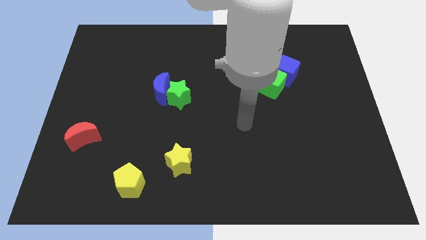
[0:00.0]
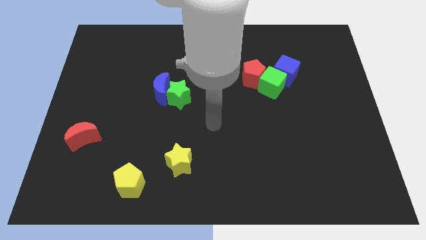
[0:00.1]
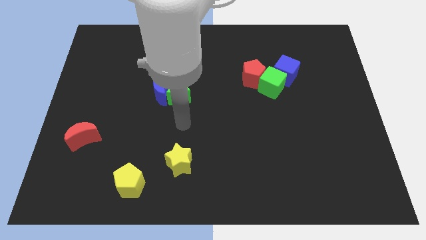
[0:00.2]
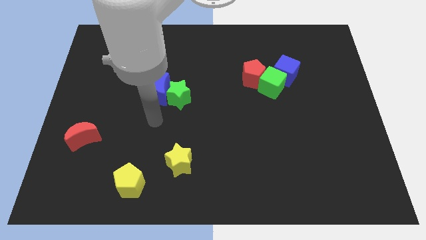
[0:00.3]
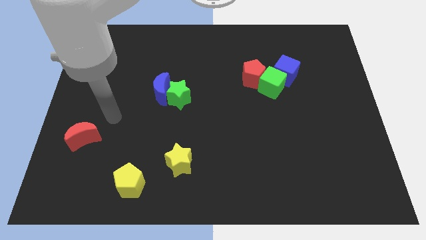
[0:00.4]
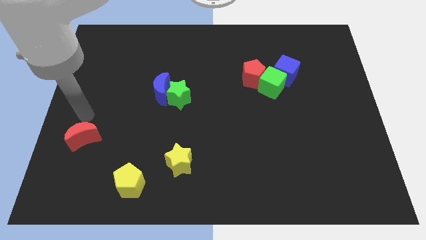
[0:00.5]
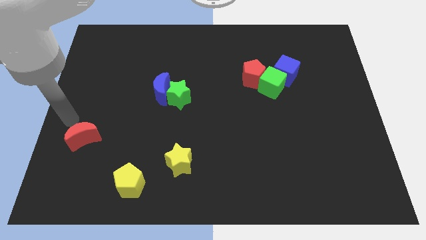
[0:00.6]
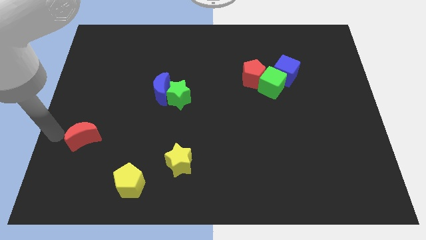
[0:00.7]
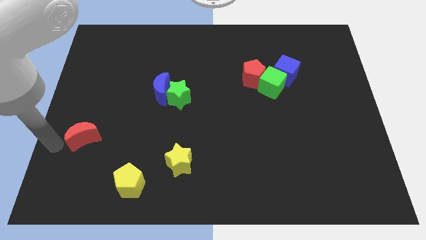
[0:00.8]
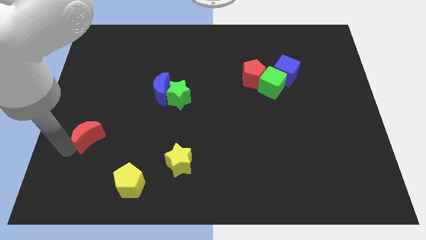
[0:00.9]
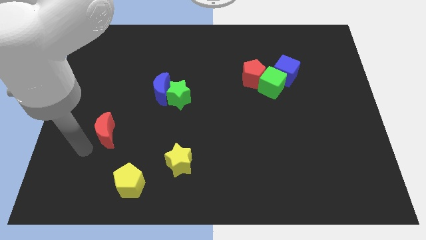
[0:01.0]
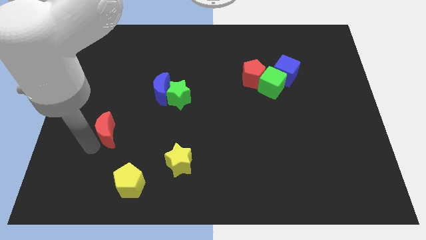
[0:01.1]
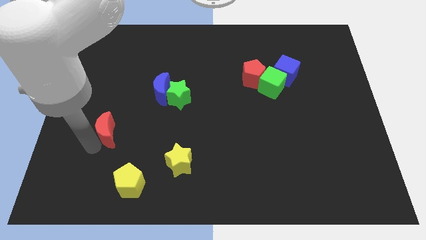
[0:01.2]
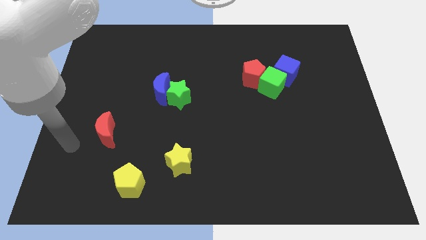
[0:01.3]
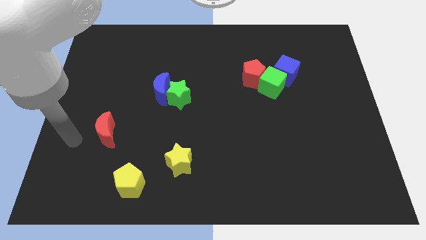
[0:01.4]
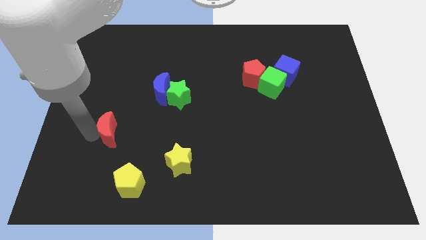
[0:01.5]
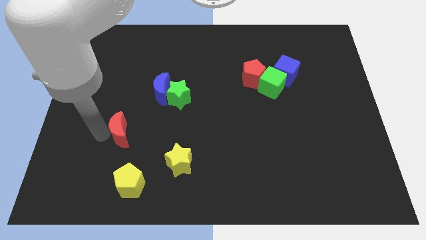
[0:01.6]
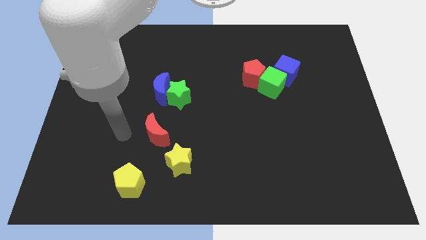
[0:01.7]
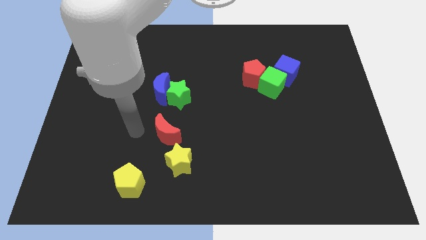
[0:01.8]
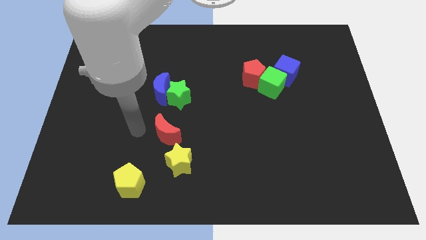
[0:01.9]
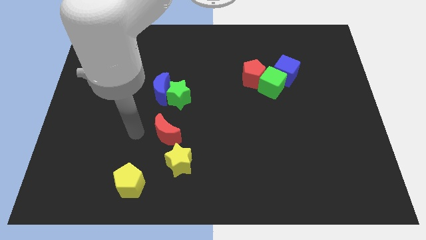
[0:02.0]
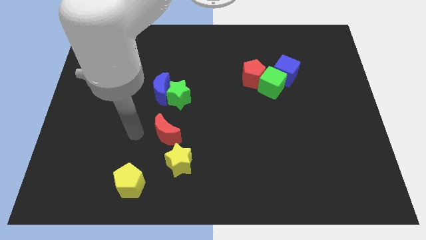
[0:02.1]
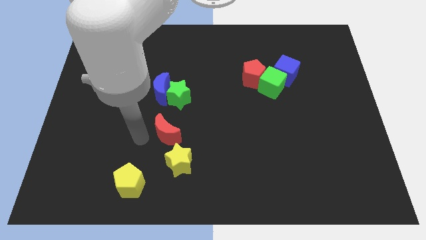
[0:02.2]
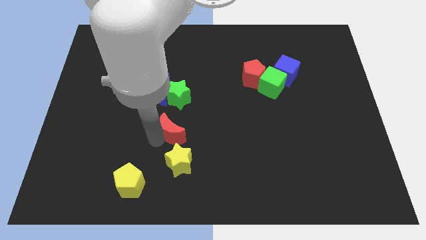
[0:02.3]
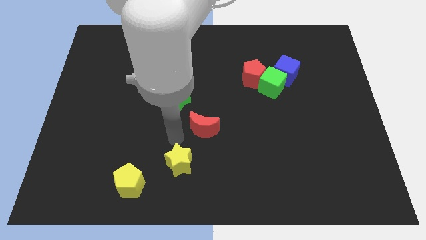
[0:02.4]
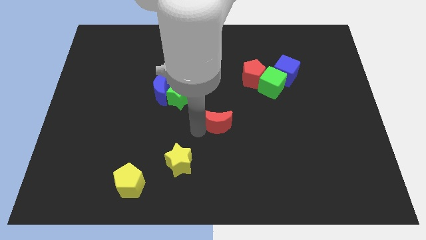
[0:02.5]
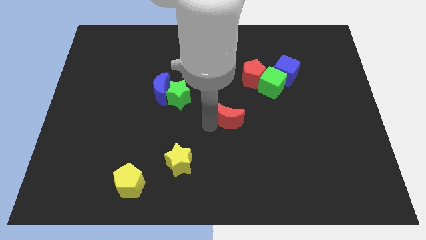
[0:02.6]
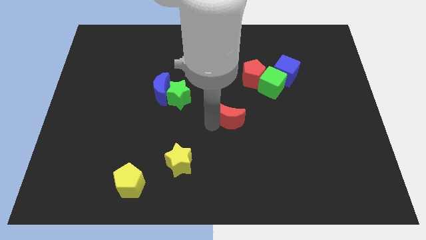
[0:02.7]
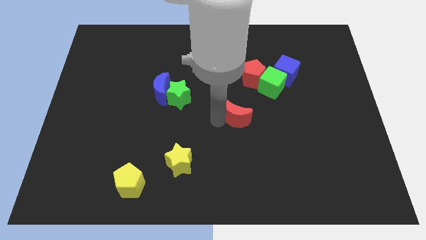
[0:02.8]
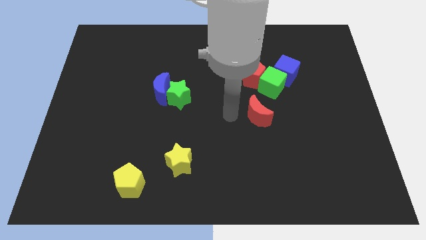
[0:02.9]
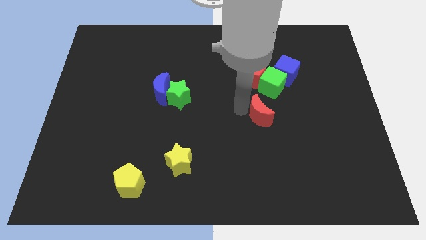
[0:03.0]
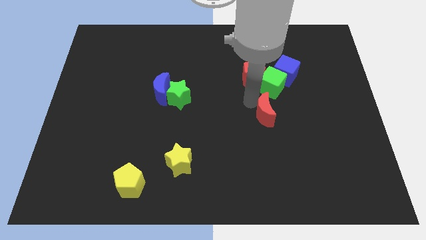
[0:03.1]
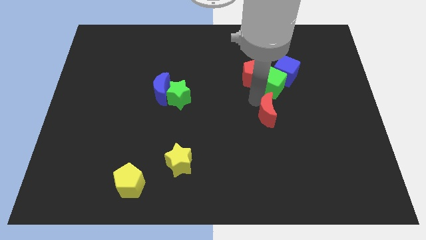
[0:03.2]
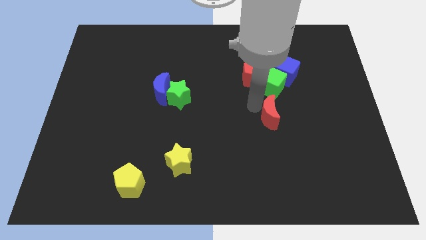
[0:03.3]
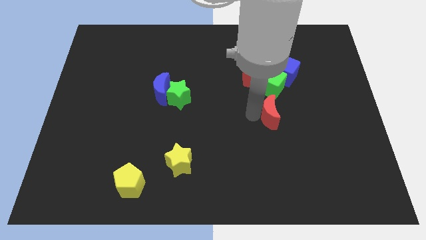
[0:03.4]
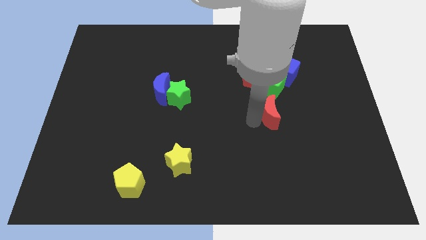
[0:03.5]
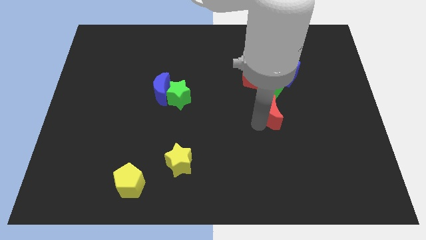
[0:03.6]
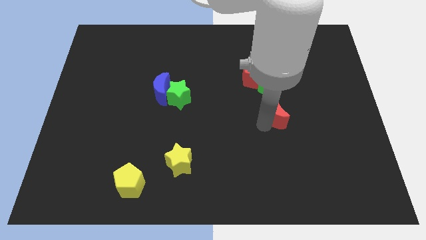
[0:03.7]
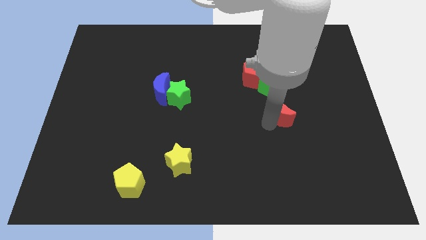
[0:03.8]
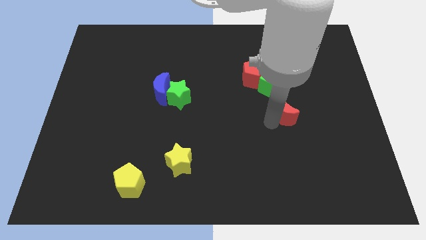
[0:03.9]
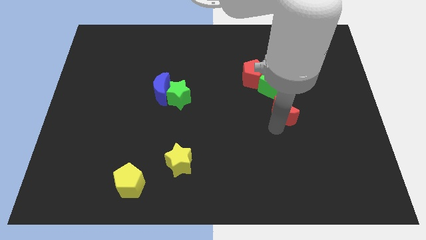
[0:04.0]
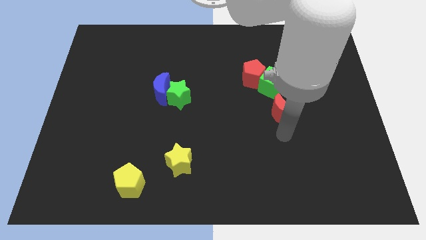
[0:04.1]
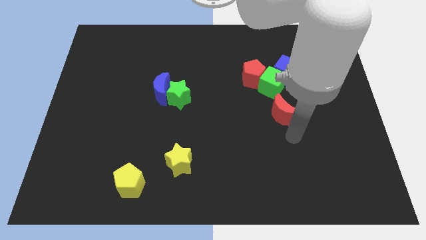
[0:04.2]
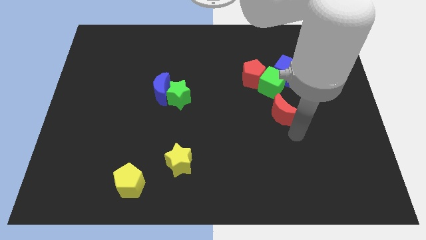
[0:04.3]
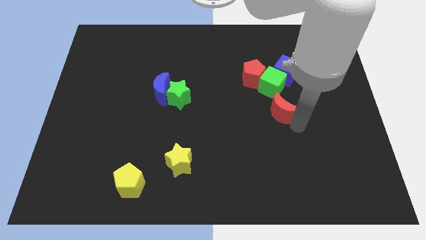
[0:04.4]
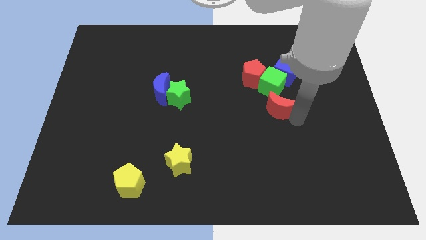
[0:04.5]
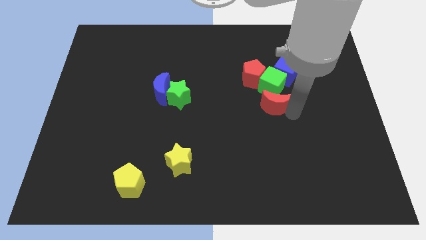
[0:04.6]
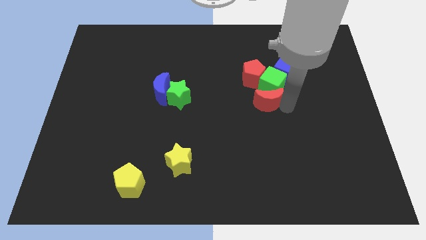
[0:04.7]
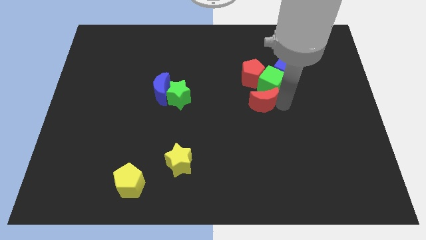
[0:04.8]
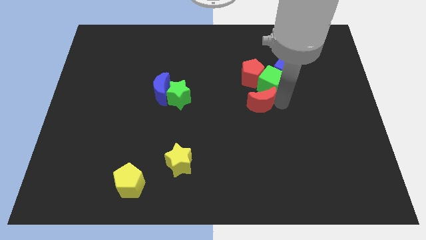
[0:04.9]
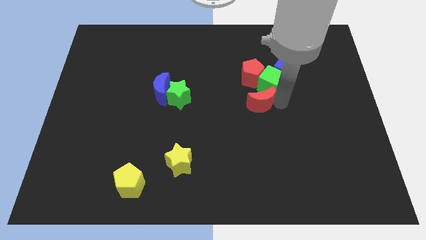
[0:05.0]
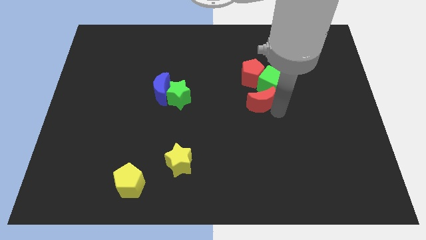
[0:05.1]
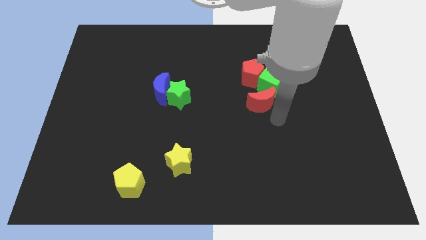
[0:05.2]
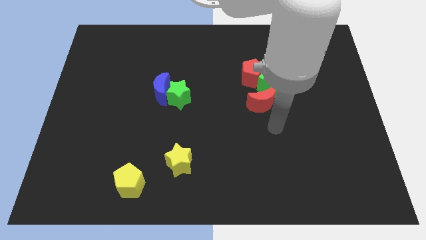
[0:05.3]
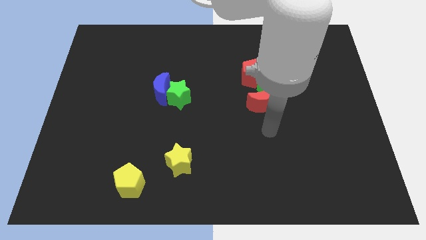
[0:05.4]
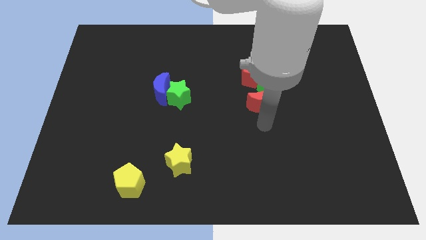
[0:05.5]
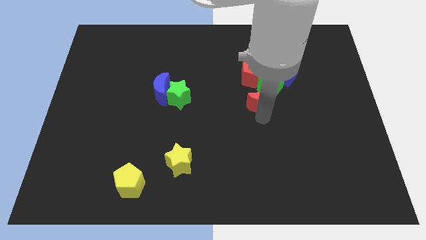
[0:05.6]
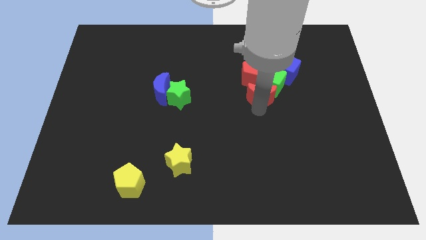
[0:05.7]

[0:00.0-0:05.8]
move the red moon to the green cube

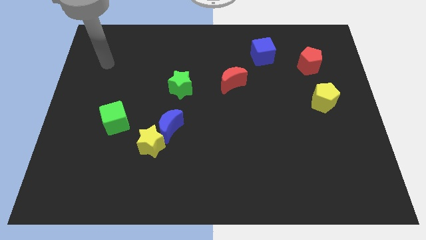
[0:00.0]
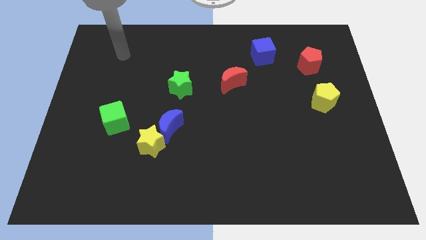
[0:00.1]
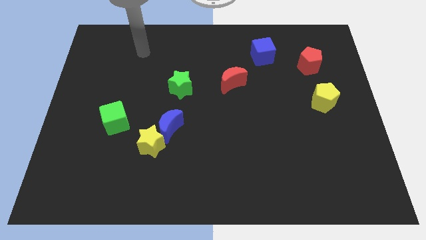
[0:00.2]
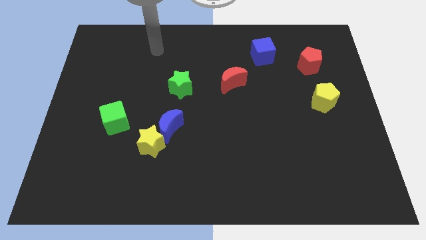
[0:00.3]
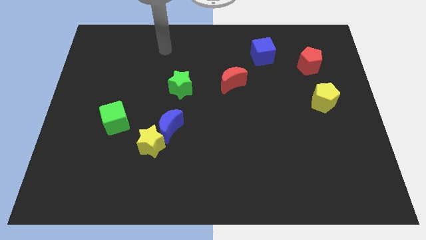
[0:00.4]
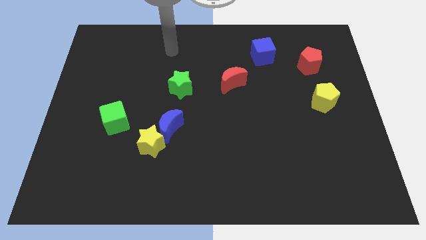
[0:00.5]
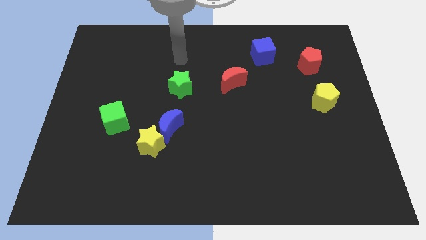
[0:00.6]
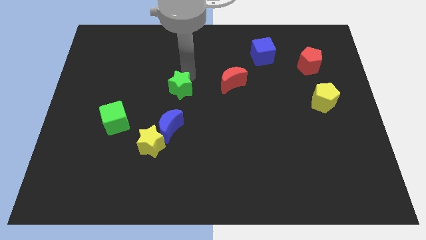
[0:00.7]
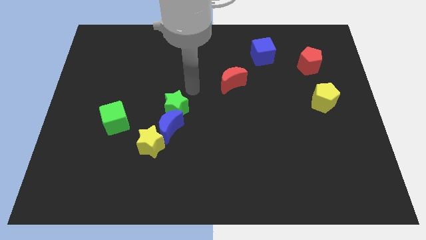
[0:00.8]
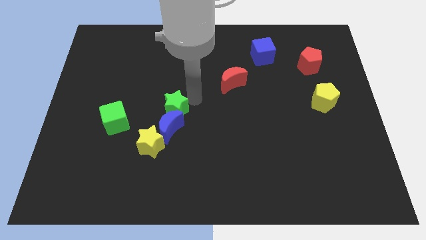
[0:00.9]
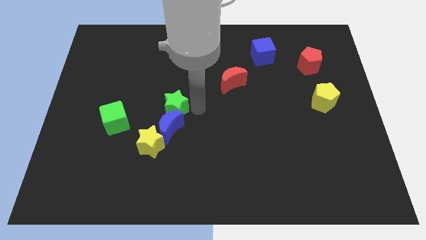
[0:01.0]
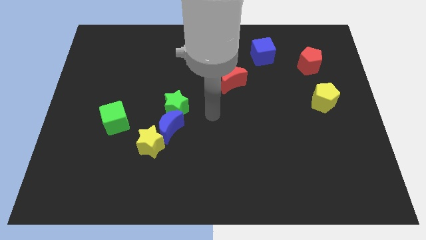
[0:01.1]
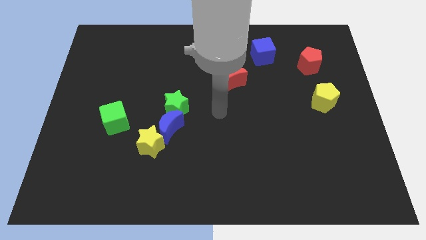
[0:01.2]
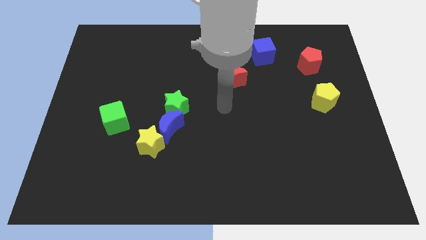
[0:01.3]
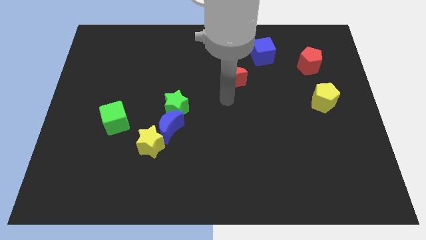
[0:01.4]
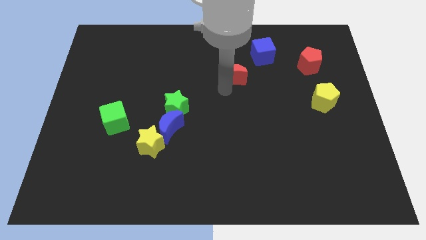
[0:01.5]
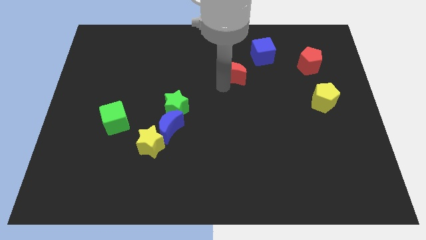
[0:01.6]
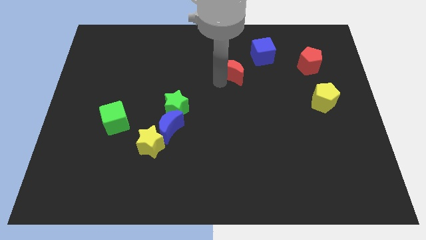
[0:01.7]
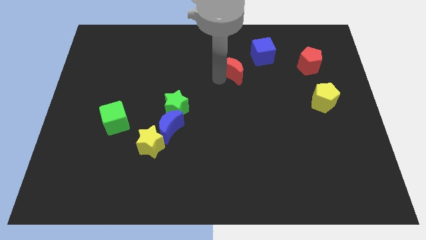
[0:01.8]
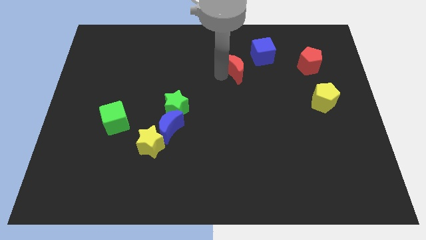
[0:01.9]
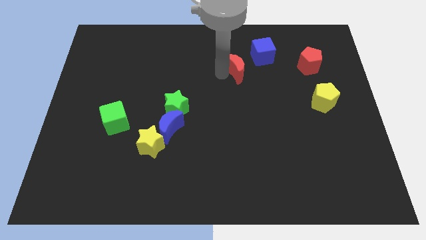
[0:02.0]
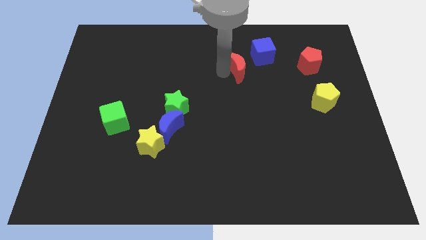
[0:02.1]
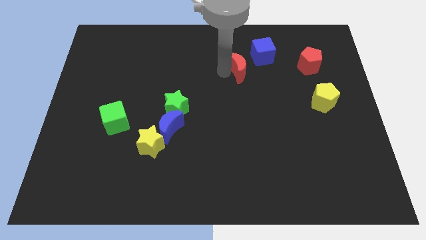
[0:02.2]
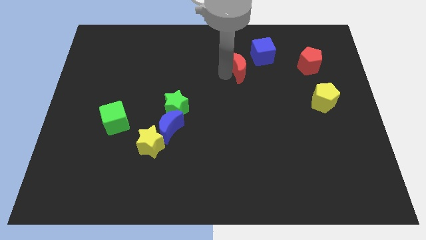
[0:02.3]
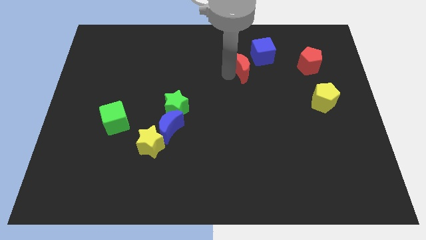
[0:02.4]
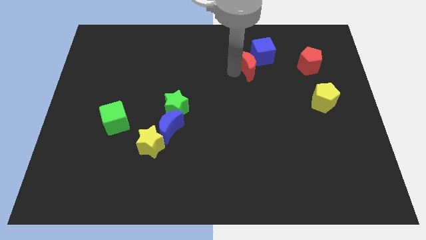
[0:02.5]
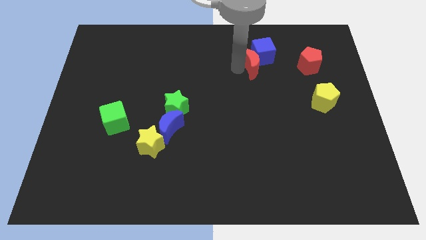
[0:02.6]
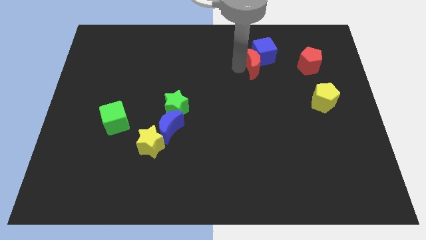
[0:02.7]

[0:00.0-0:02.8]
push the red moon to the blue cube
